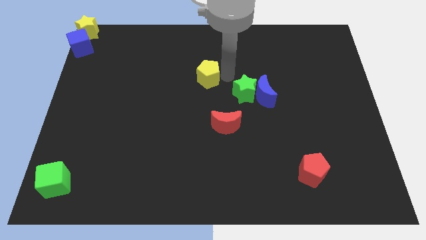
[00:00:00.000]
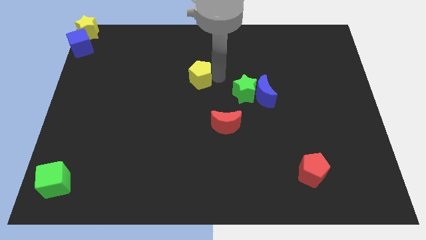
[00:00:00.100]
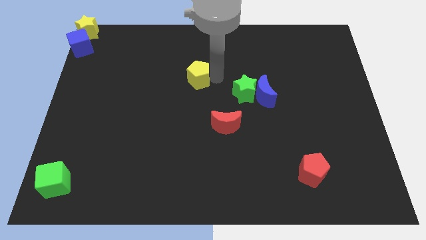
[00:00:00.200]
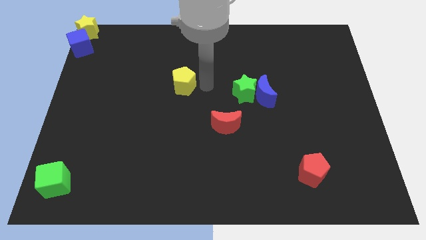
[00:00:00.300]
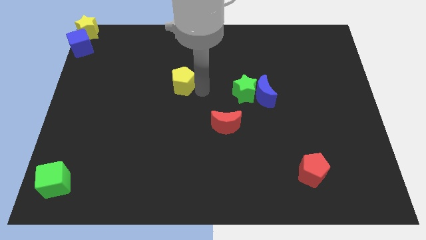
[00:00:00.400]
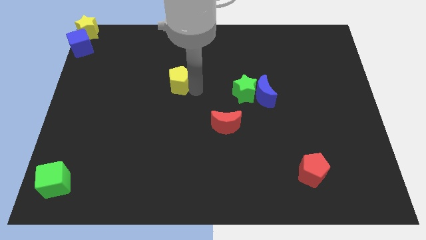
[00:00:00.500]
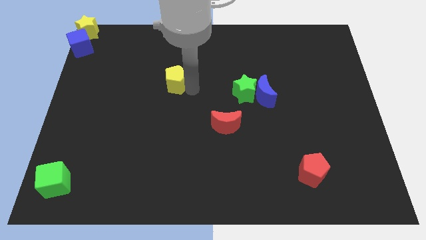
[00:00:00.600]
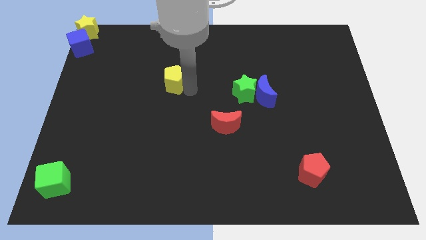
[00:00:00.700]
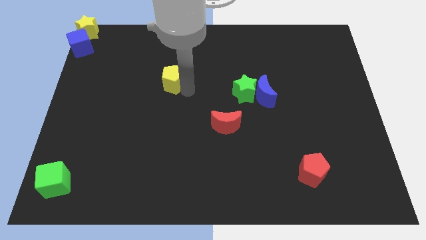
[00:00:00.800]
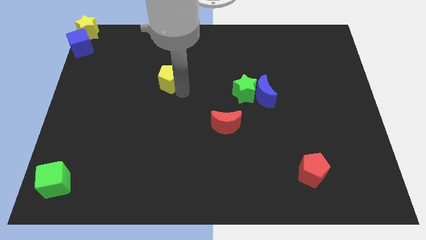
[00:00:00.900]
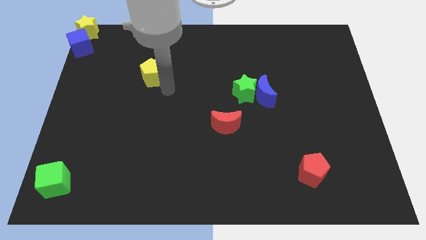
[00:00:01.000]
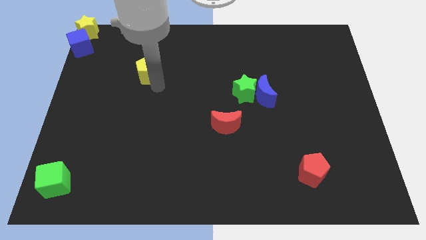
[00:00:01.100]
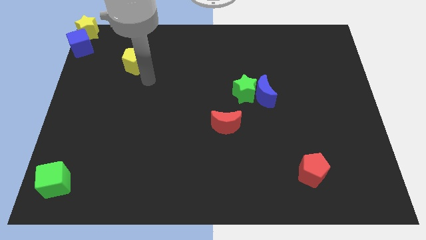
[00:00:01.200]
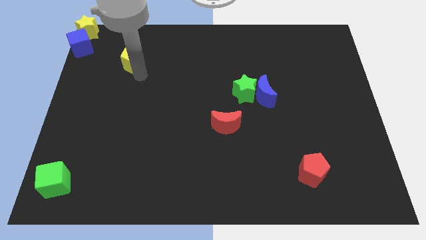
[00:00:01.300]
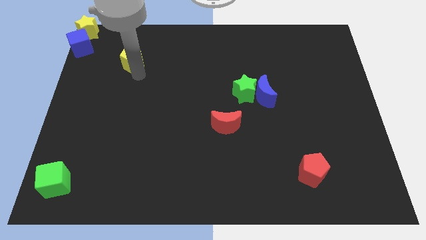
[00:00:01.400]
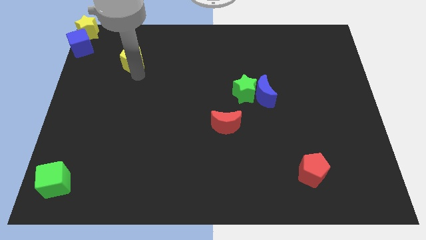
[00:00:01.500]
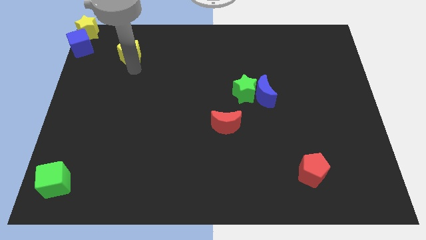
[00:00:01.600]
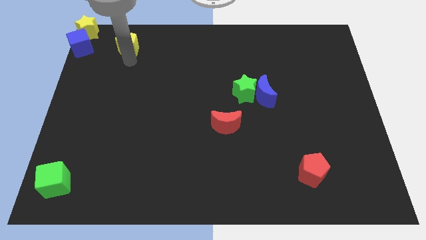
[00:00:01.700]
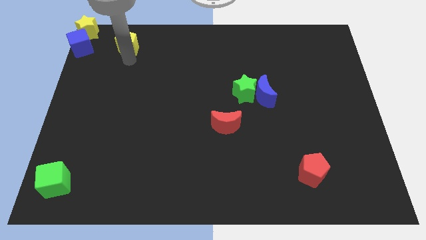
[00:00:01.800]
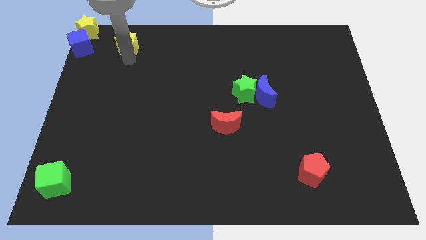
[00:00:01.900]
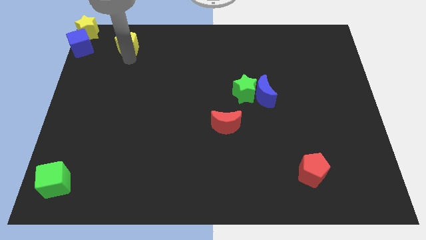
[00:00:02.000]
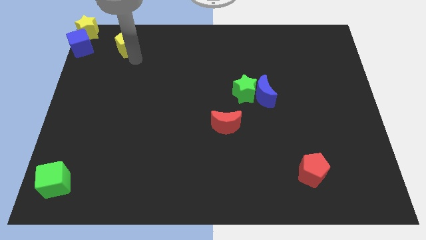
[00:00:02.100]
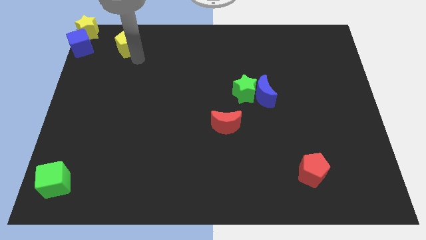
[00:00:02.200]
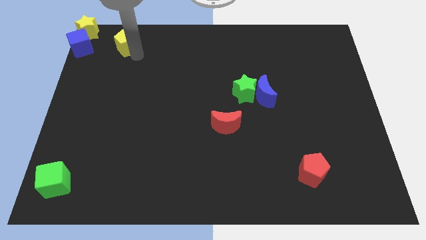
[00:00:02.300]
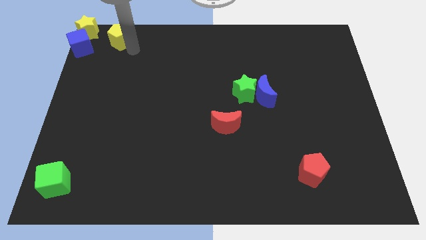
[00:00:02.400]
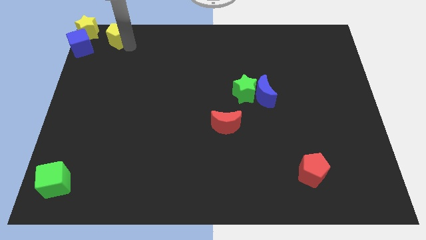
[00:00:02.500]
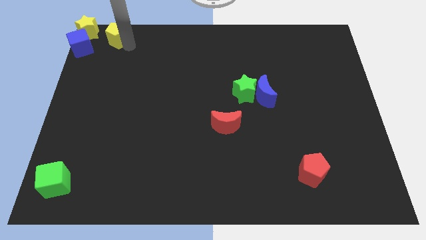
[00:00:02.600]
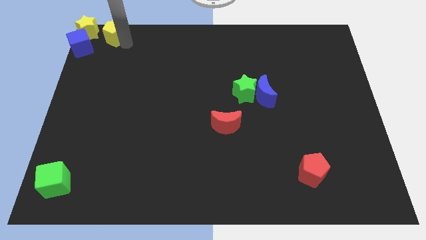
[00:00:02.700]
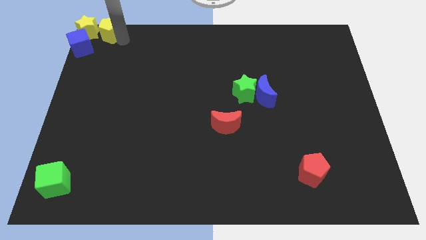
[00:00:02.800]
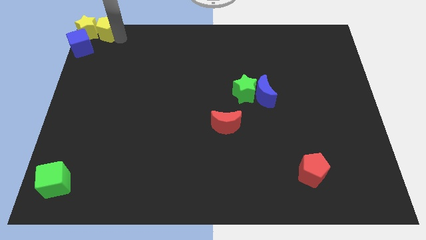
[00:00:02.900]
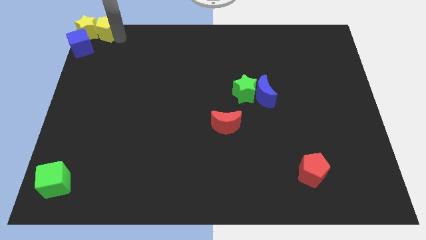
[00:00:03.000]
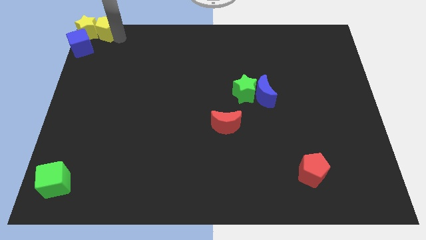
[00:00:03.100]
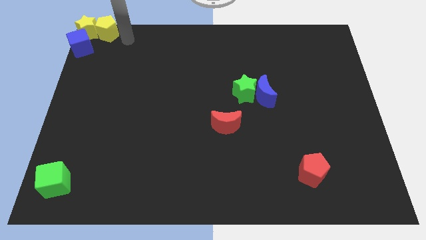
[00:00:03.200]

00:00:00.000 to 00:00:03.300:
slide the yellow pentagon to the right side of the yellow star

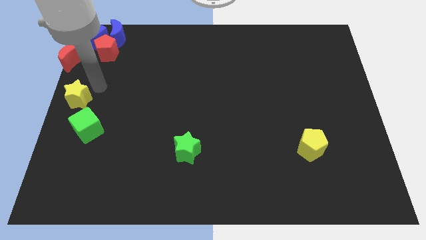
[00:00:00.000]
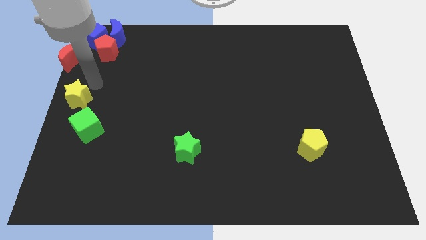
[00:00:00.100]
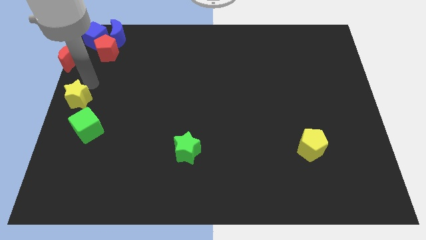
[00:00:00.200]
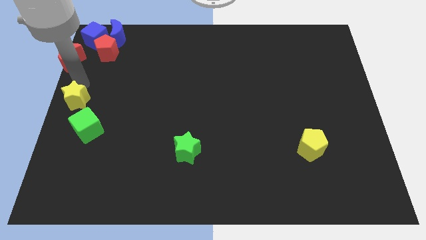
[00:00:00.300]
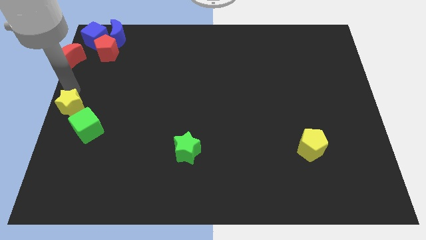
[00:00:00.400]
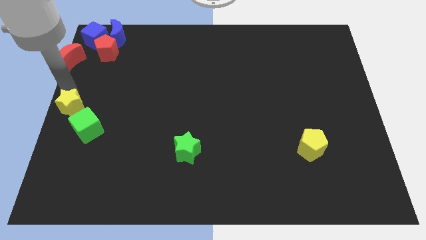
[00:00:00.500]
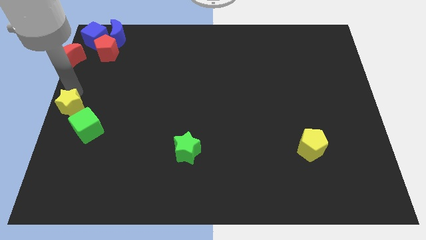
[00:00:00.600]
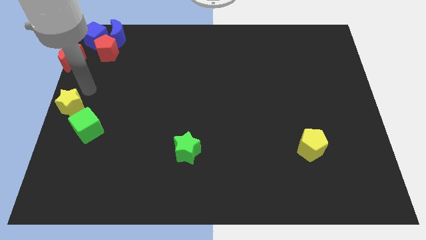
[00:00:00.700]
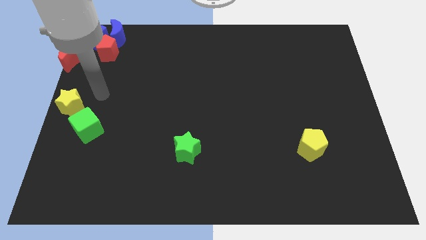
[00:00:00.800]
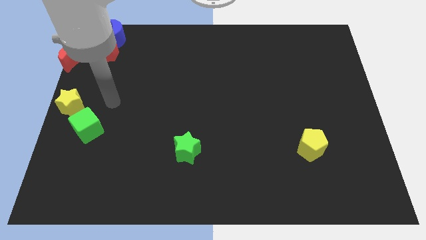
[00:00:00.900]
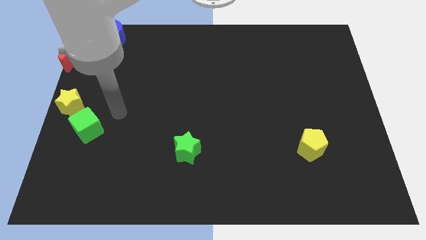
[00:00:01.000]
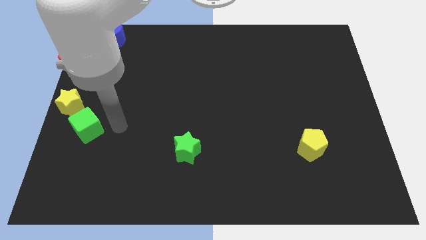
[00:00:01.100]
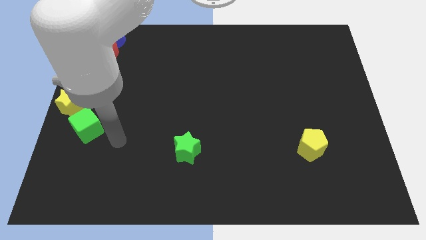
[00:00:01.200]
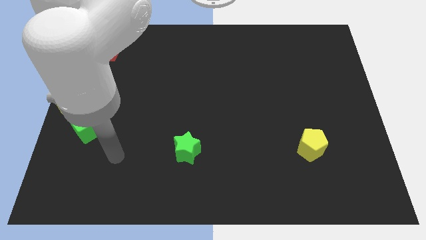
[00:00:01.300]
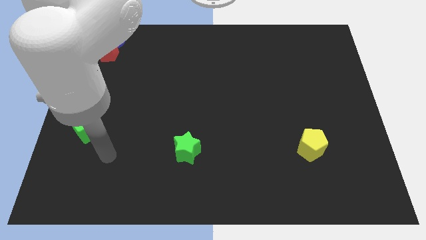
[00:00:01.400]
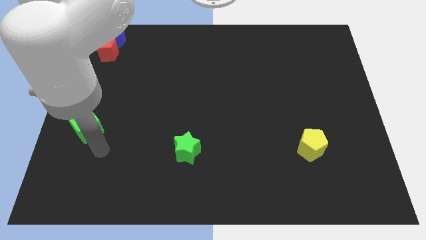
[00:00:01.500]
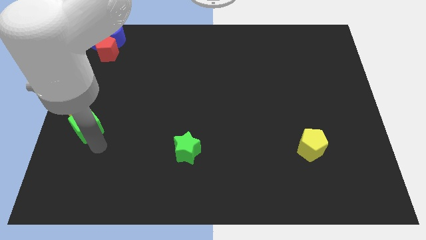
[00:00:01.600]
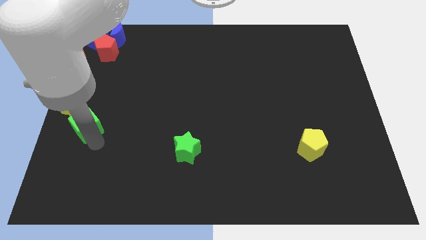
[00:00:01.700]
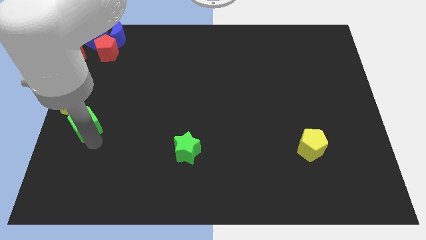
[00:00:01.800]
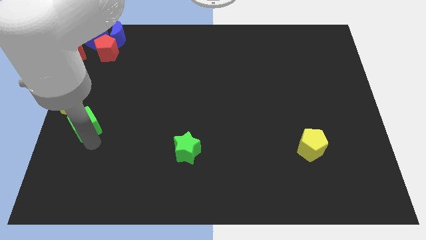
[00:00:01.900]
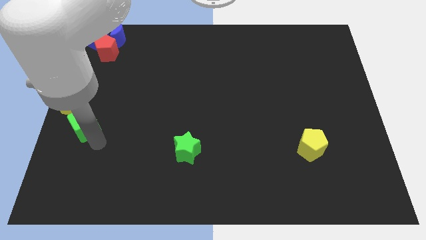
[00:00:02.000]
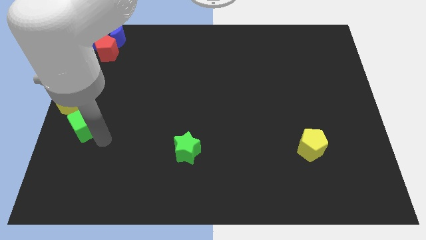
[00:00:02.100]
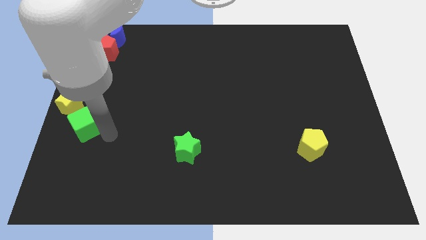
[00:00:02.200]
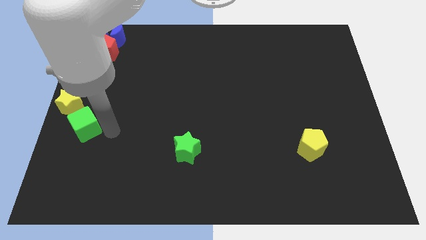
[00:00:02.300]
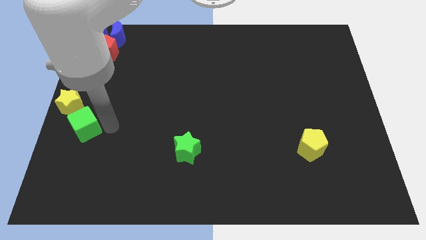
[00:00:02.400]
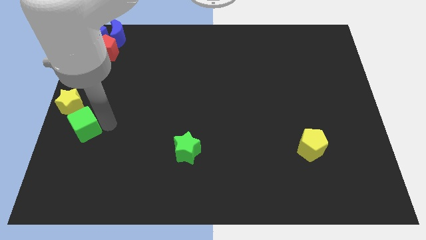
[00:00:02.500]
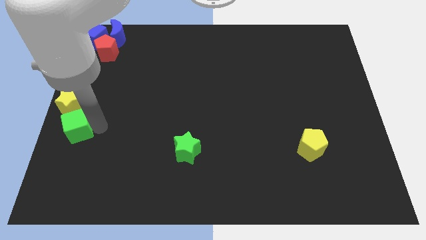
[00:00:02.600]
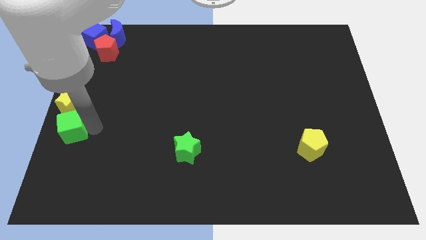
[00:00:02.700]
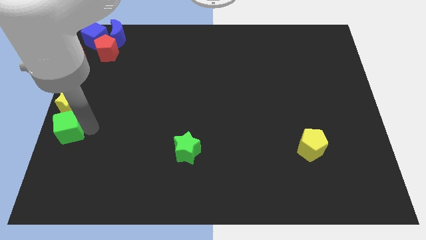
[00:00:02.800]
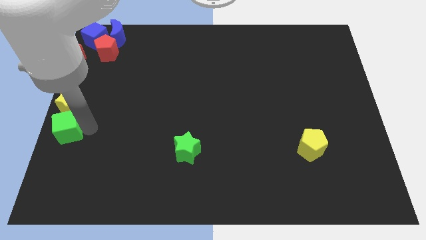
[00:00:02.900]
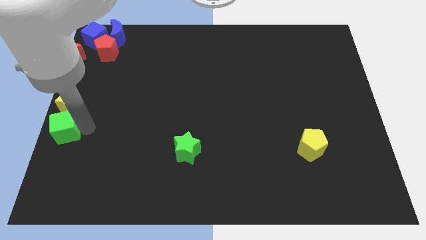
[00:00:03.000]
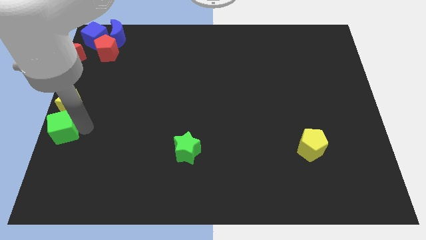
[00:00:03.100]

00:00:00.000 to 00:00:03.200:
place green cube below yellow star

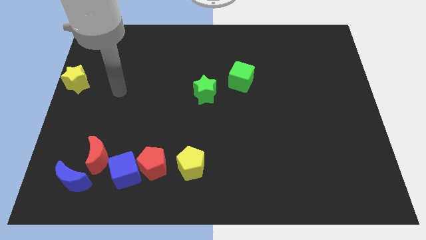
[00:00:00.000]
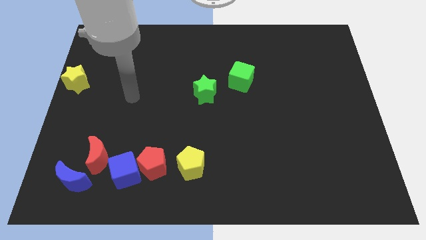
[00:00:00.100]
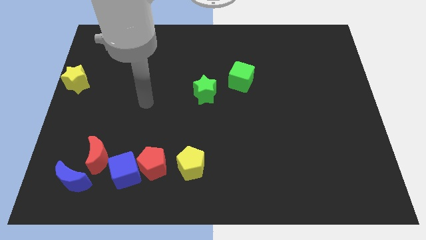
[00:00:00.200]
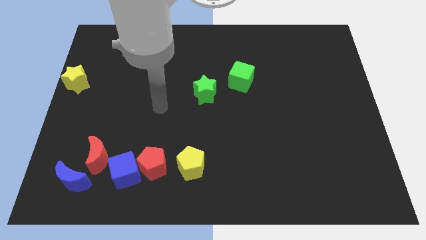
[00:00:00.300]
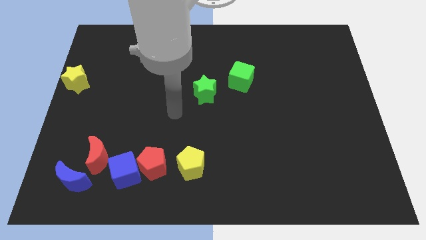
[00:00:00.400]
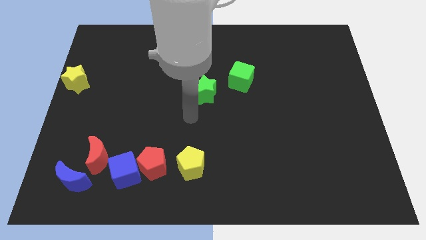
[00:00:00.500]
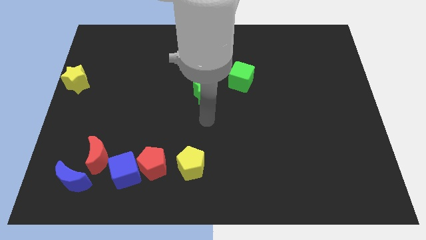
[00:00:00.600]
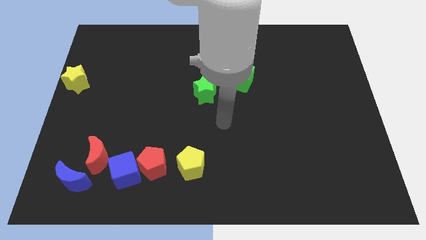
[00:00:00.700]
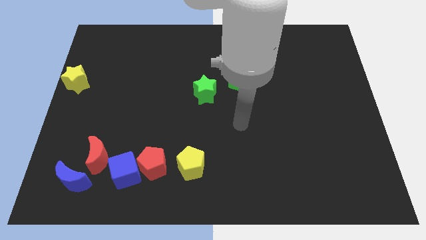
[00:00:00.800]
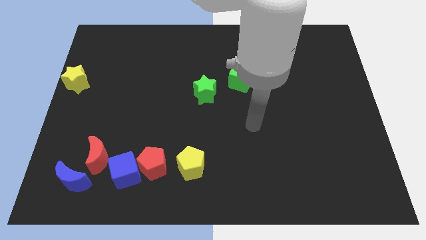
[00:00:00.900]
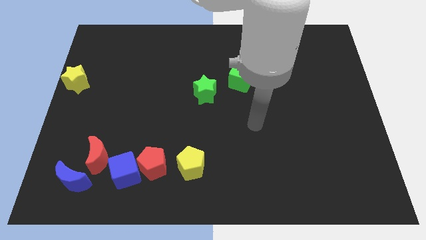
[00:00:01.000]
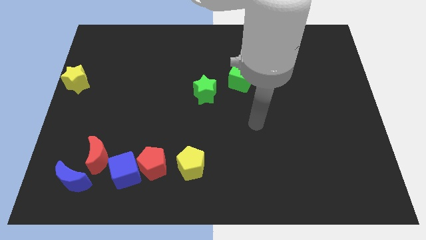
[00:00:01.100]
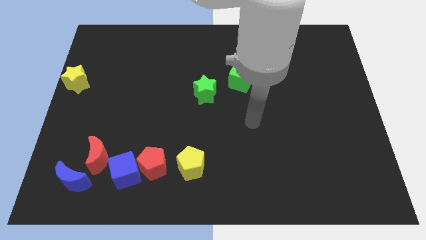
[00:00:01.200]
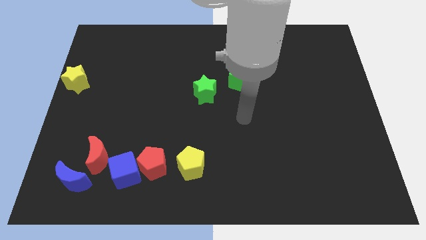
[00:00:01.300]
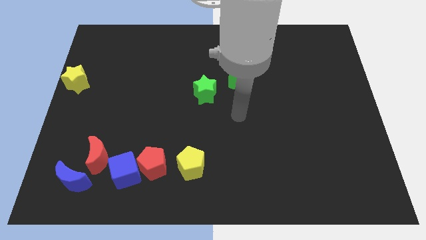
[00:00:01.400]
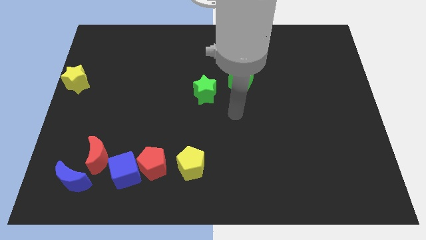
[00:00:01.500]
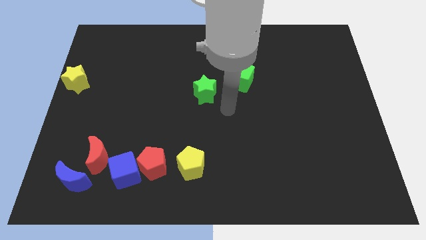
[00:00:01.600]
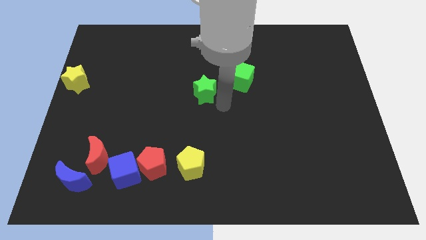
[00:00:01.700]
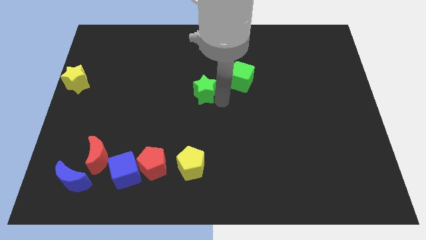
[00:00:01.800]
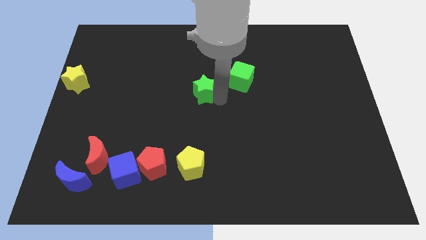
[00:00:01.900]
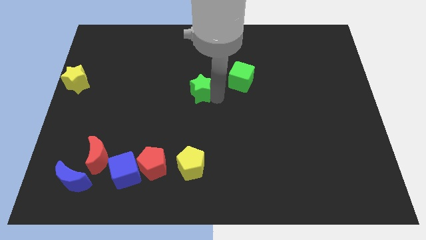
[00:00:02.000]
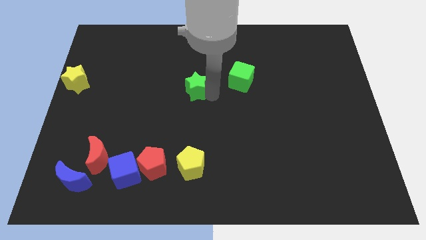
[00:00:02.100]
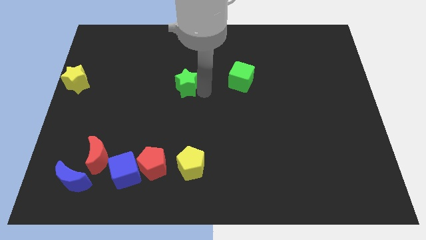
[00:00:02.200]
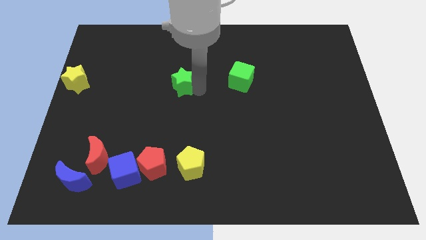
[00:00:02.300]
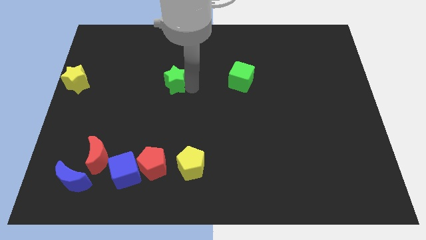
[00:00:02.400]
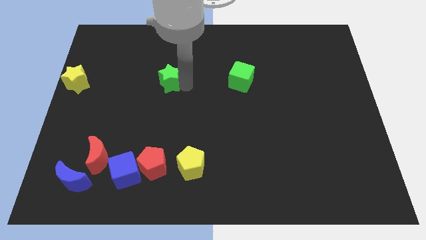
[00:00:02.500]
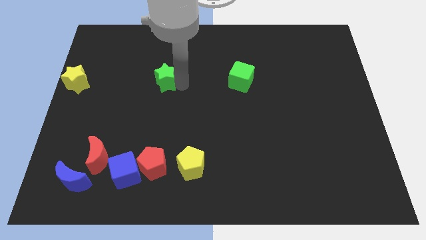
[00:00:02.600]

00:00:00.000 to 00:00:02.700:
place the green star in between yellow star and green cube
